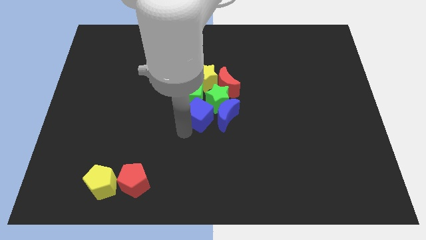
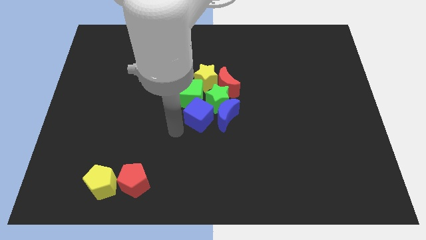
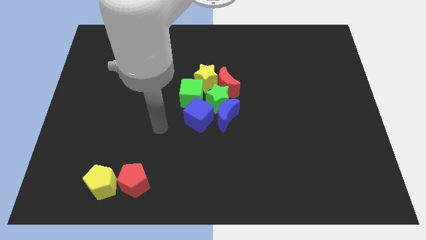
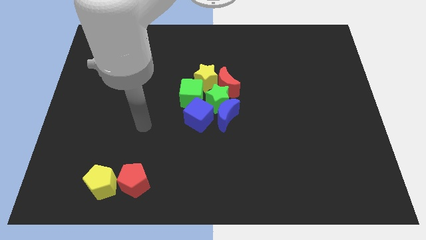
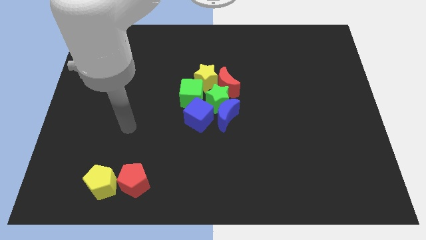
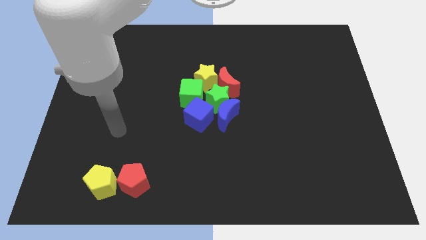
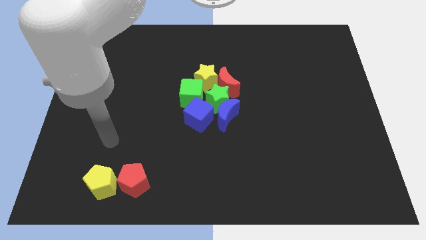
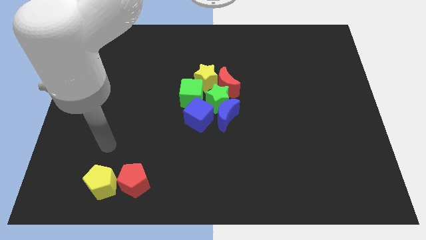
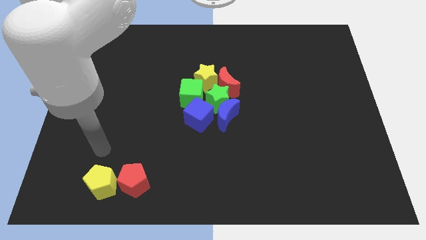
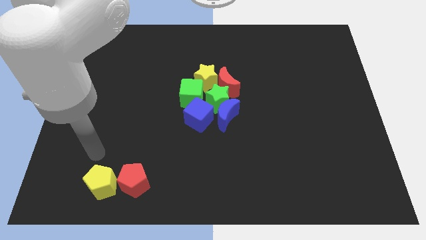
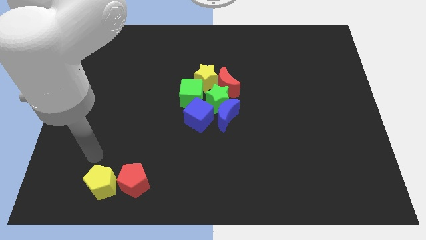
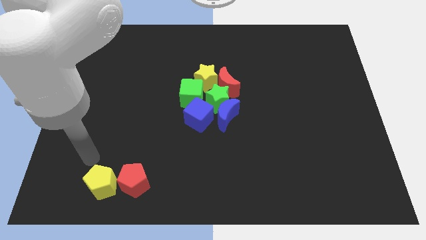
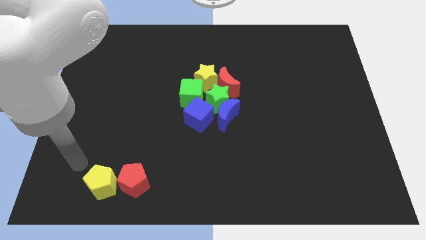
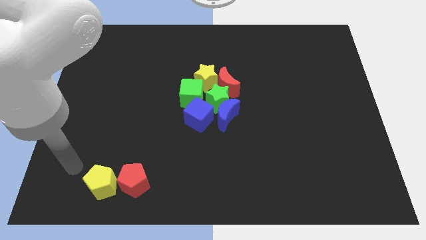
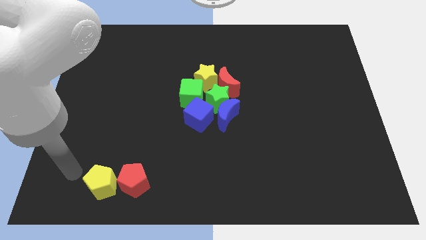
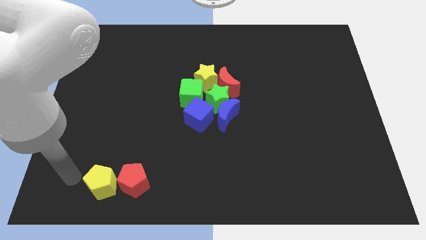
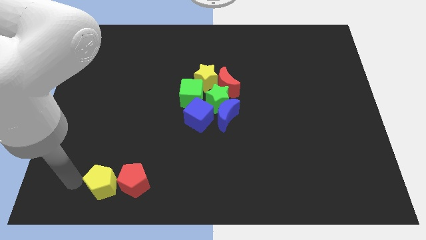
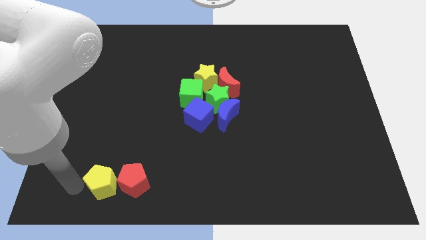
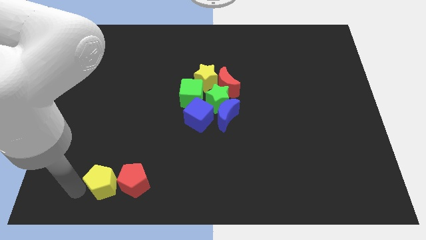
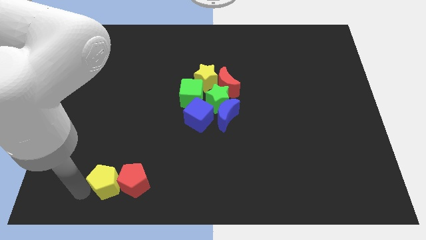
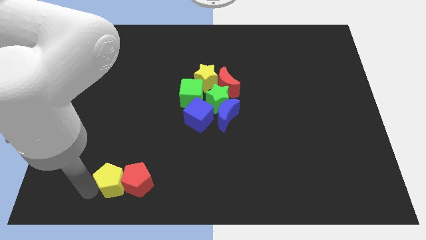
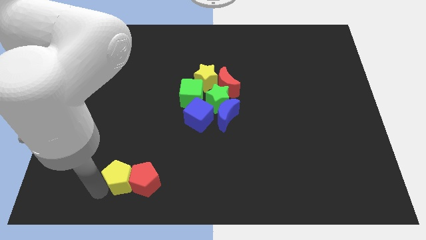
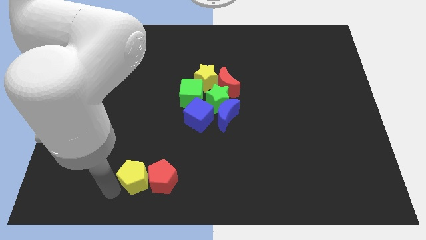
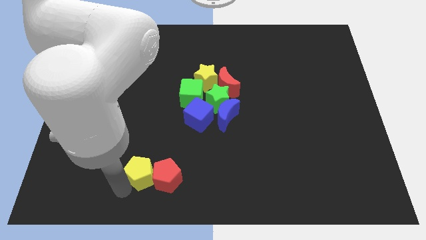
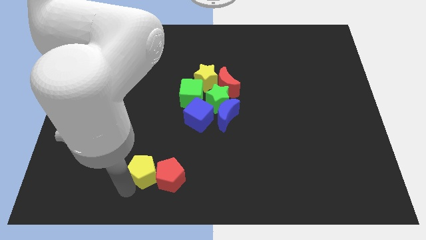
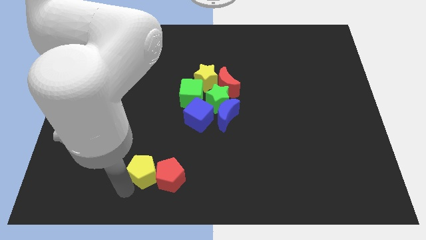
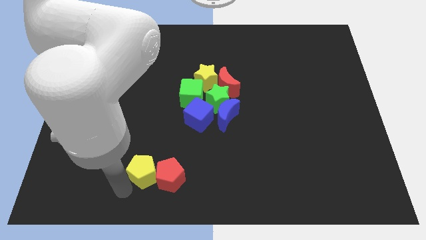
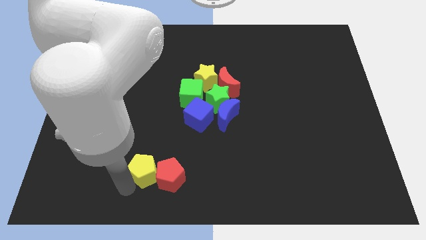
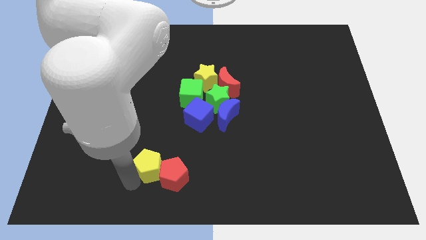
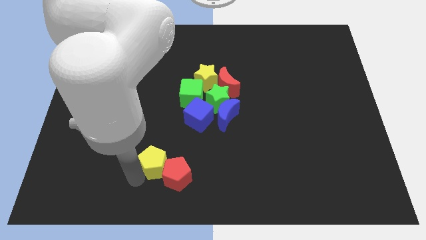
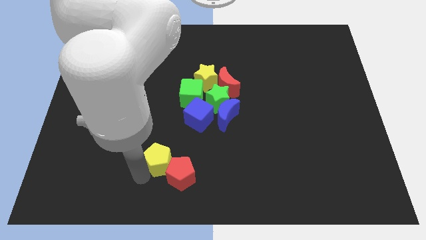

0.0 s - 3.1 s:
push yellow and red pentagons towards the right side of the board

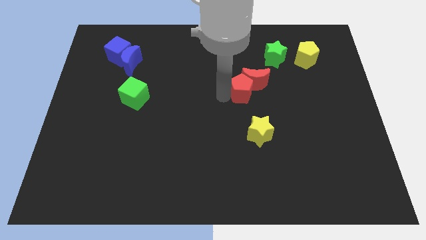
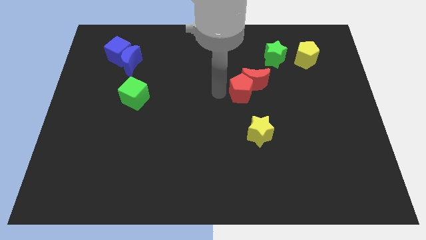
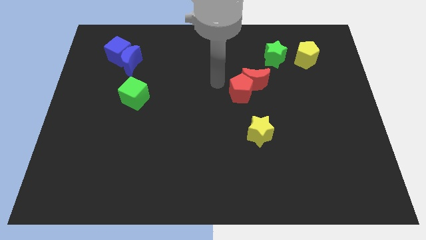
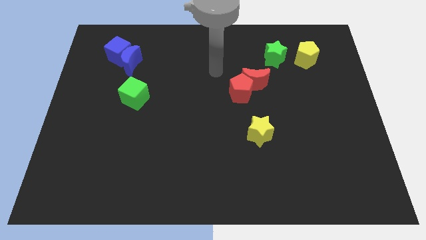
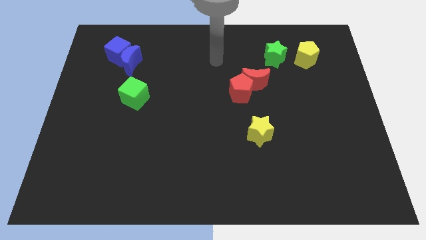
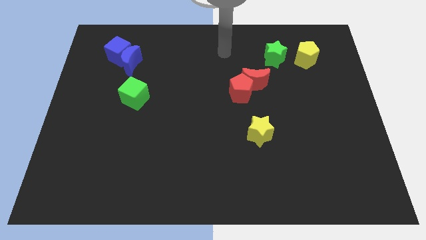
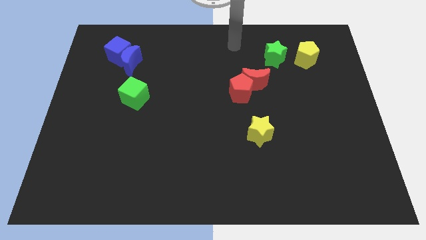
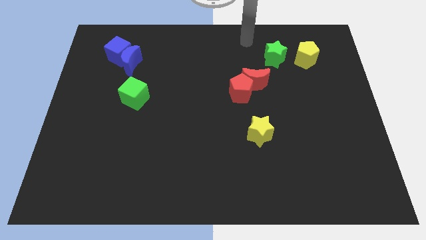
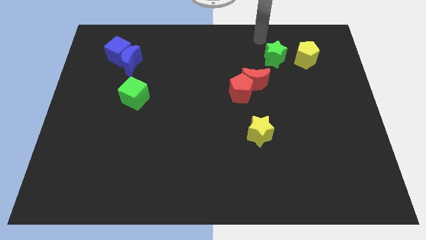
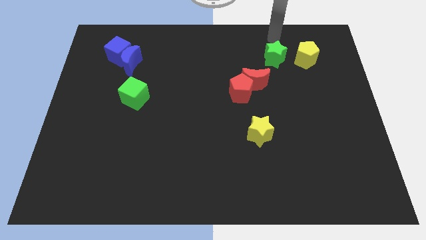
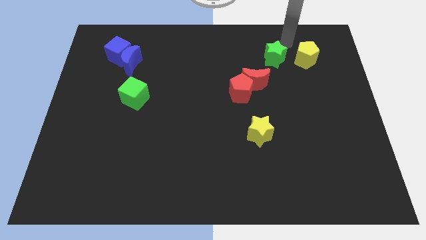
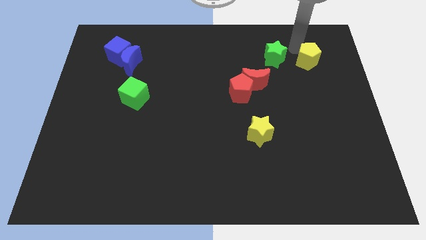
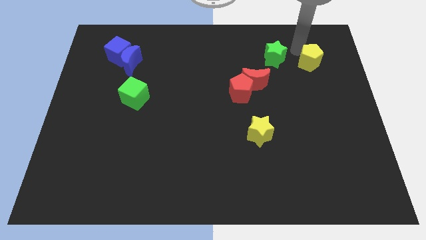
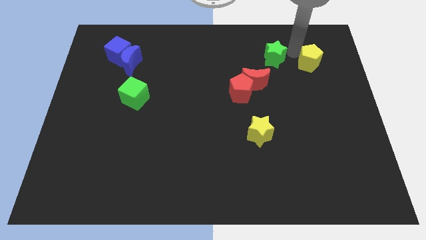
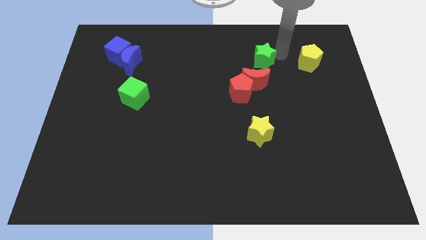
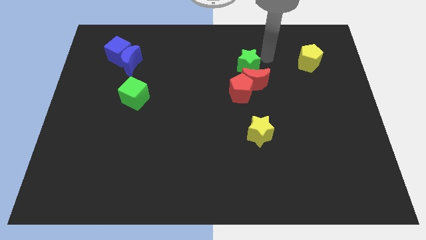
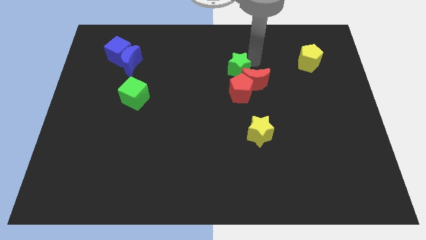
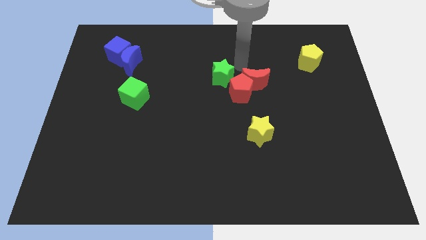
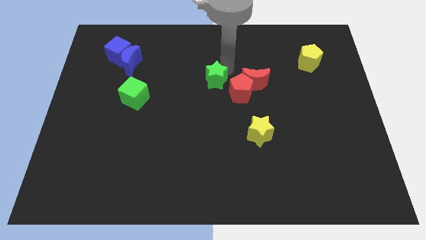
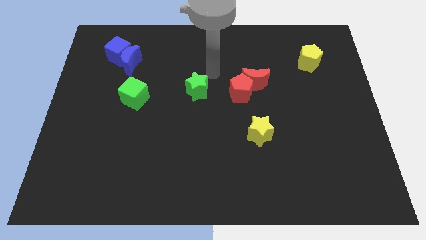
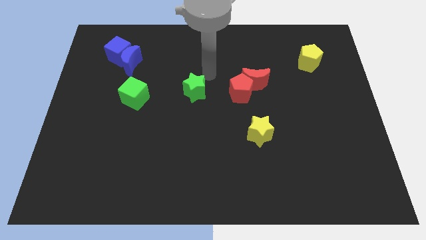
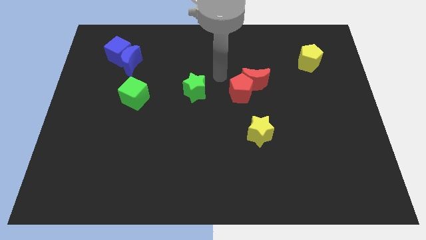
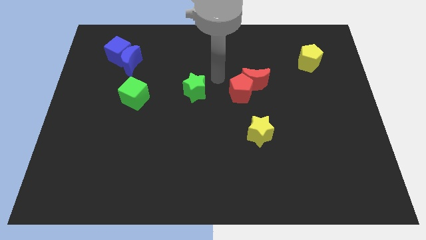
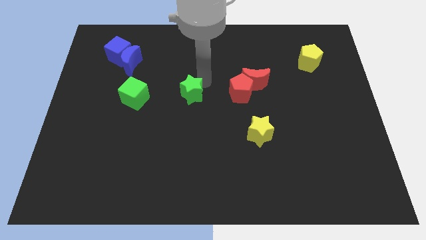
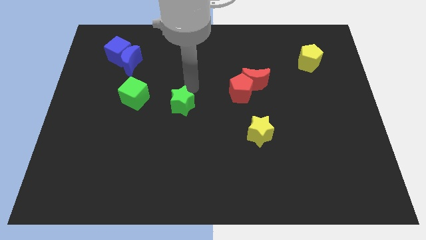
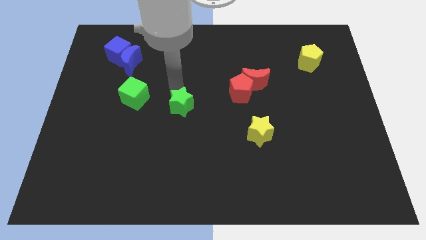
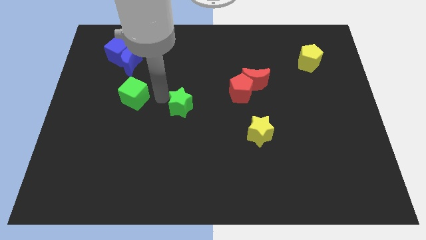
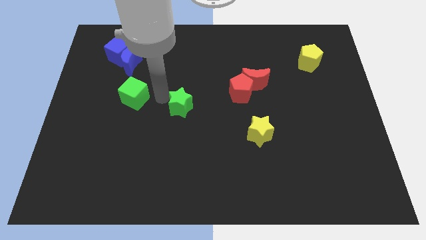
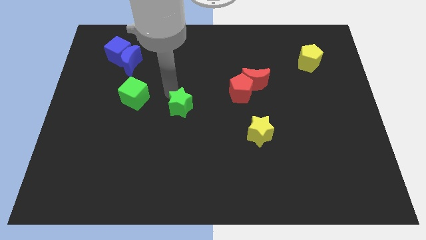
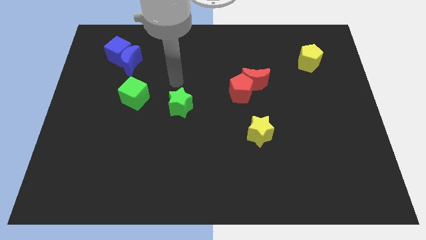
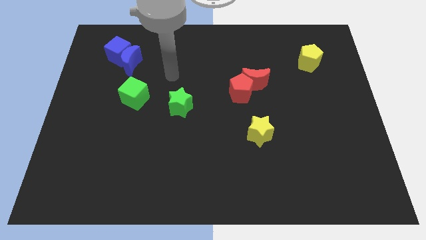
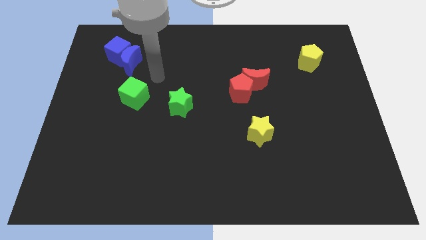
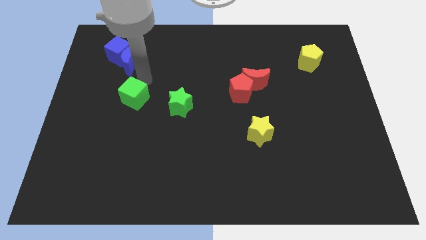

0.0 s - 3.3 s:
push the green star to the right of the green star

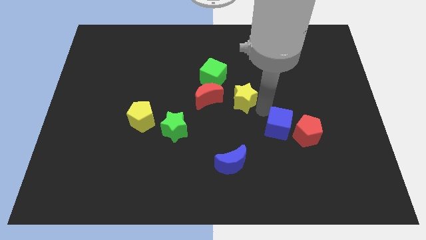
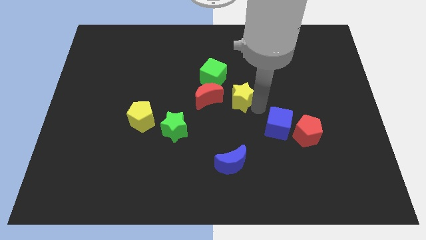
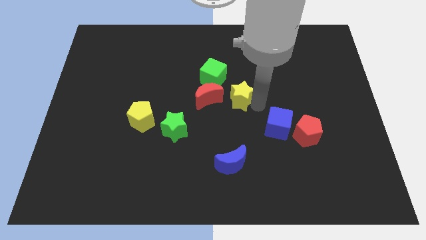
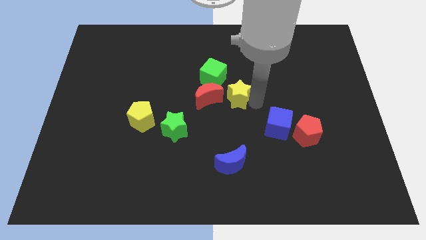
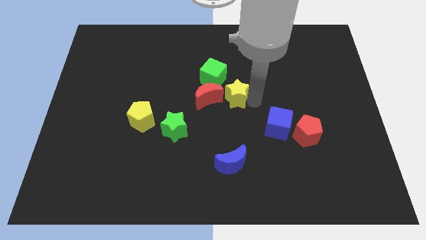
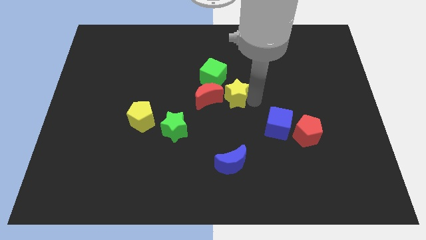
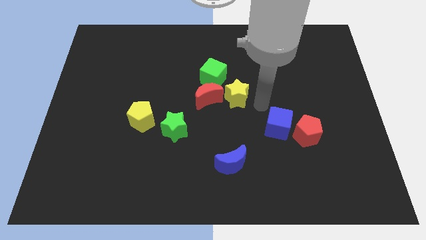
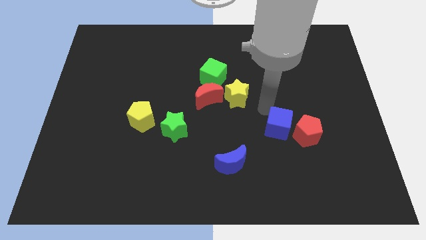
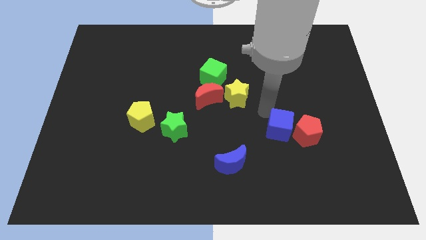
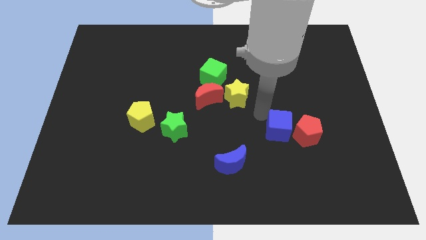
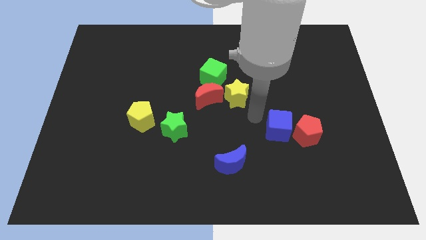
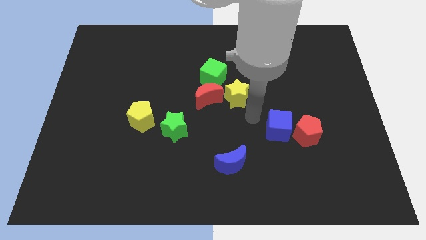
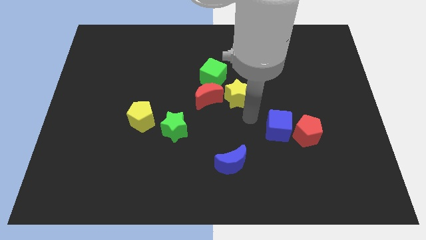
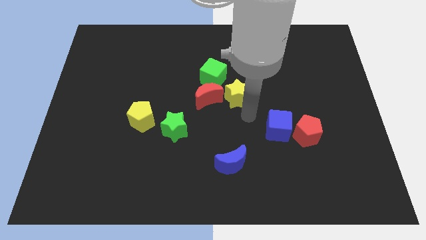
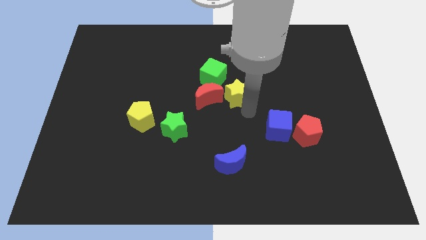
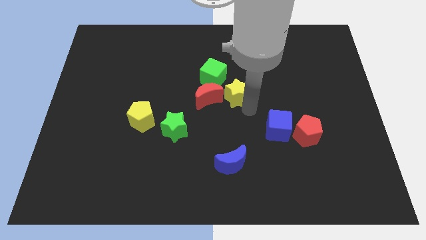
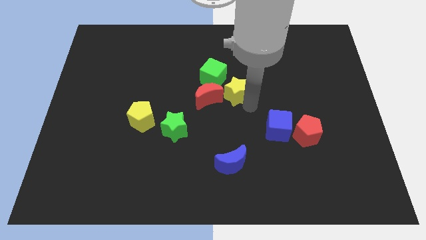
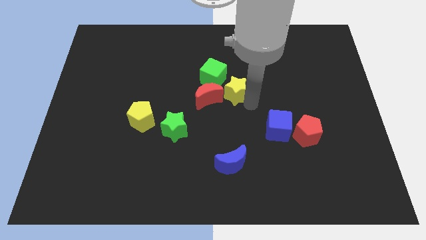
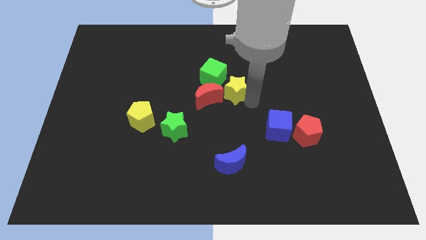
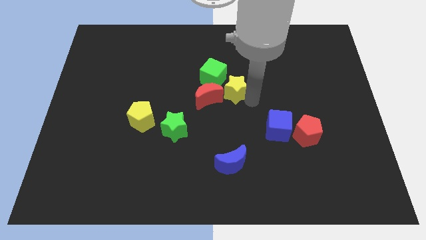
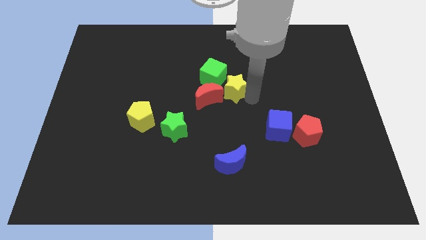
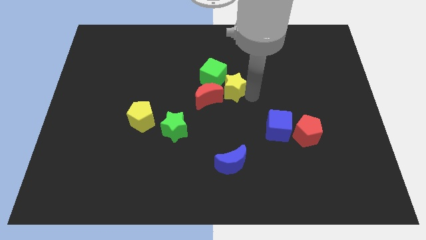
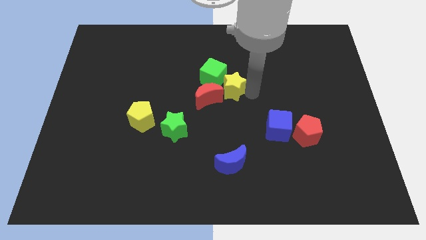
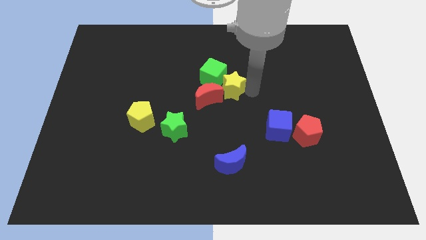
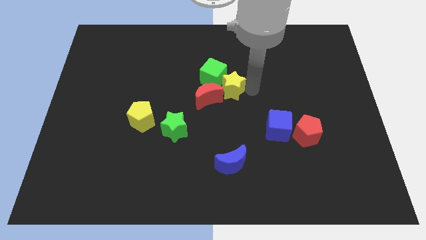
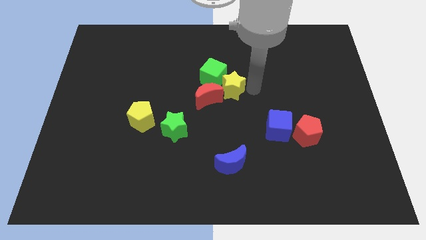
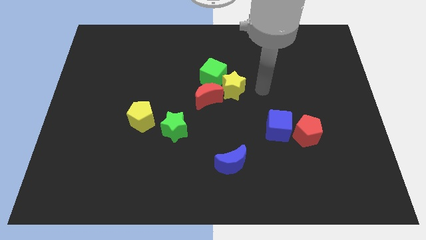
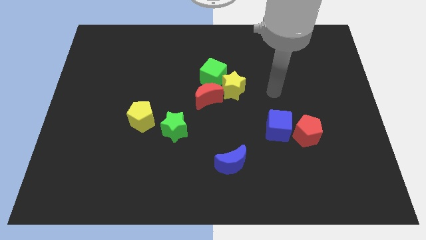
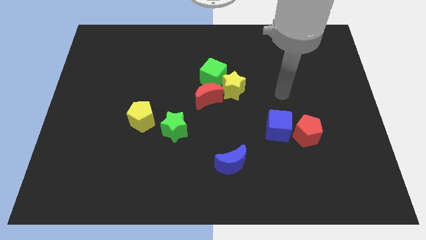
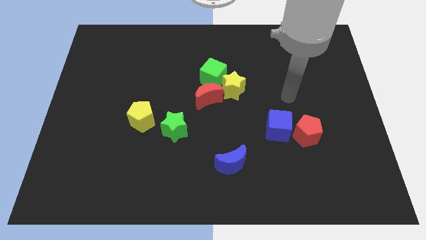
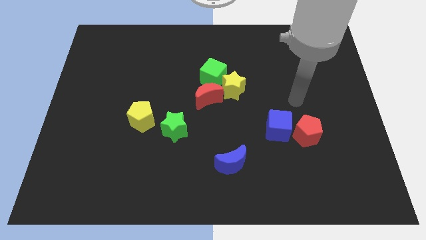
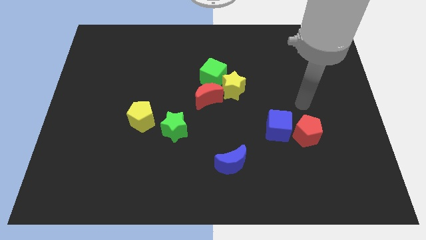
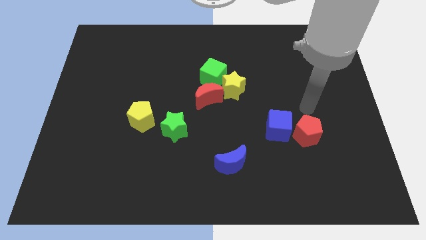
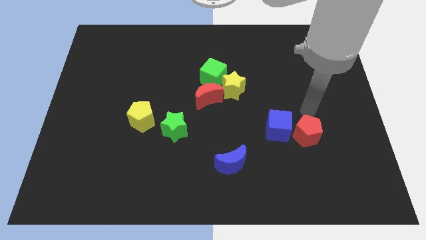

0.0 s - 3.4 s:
place the yellow star to the right of the green cube
